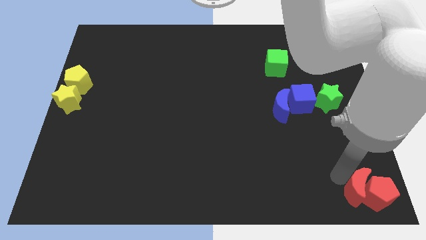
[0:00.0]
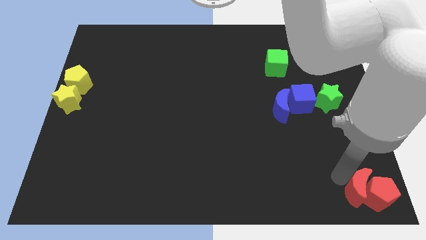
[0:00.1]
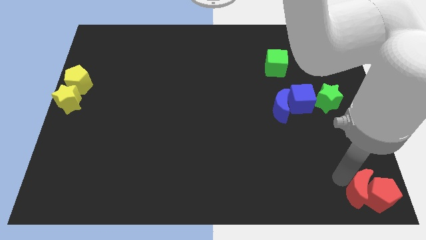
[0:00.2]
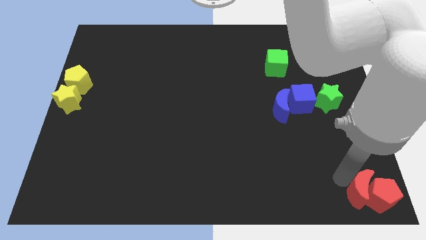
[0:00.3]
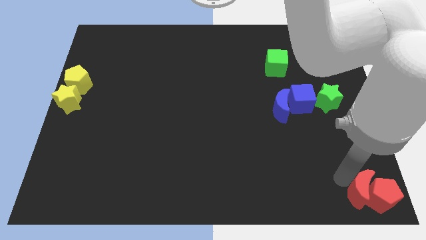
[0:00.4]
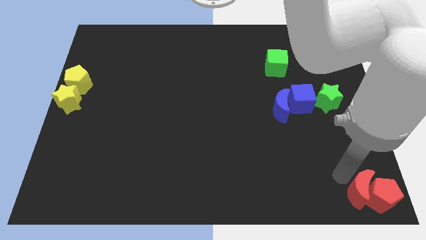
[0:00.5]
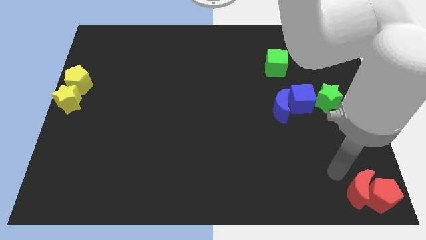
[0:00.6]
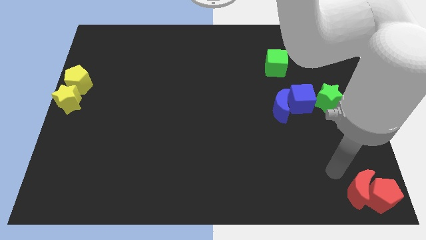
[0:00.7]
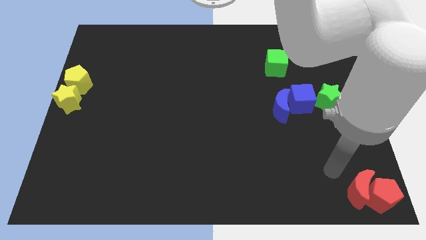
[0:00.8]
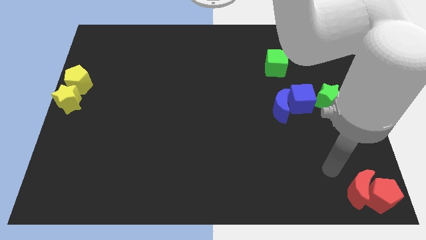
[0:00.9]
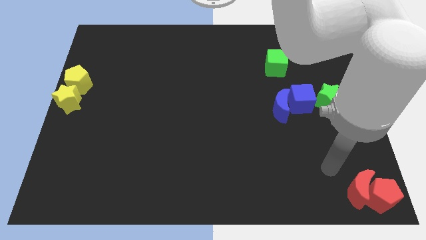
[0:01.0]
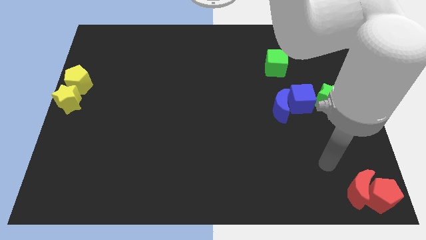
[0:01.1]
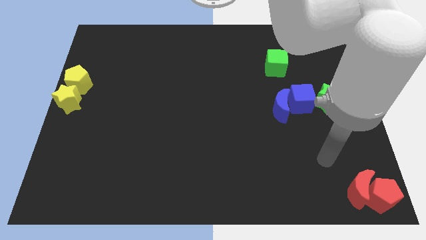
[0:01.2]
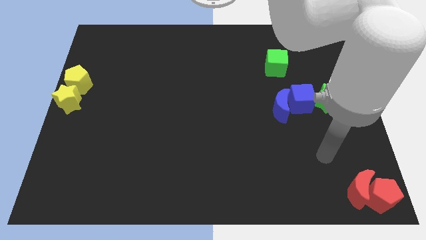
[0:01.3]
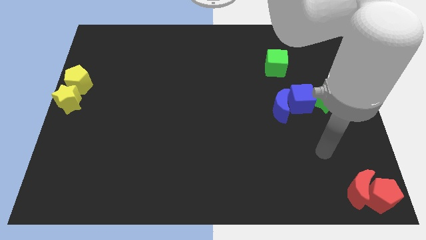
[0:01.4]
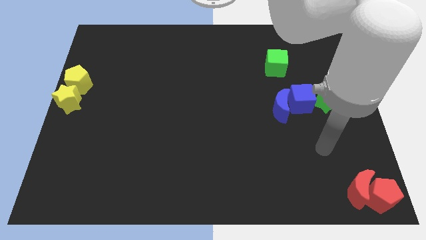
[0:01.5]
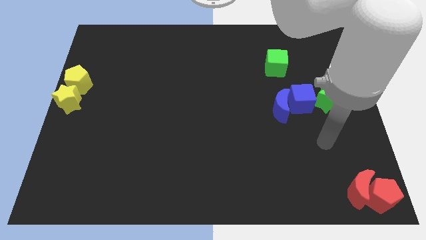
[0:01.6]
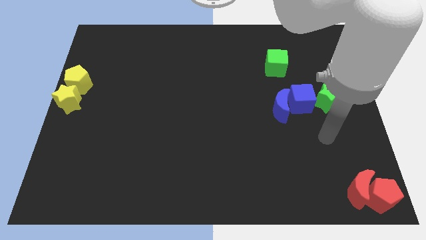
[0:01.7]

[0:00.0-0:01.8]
place the red pentagon to the bottom right

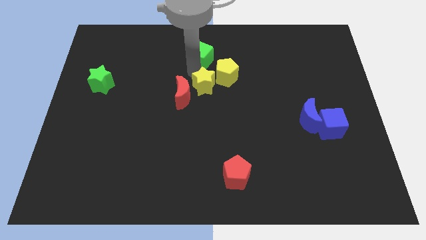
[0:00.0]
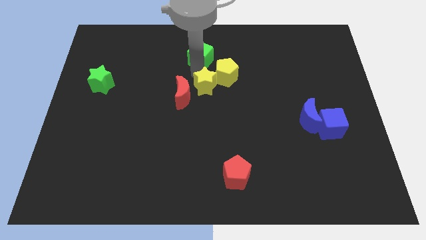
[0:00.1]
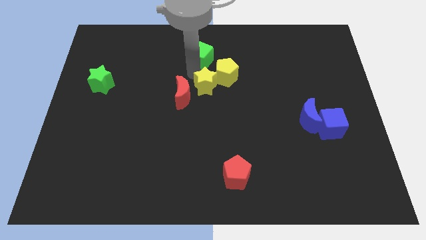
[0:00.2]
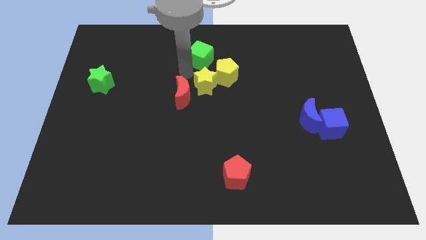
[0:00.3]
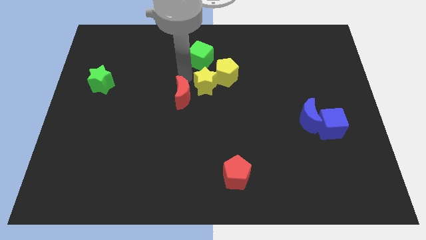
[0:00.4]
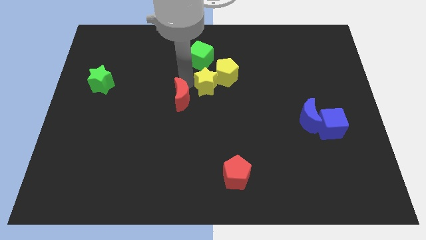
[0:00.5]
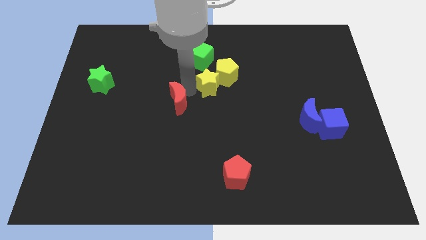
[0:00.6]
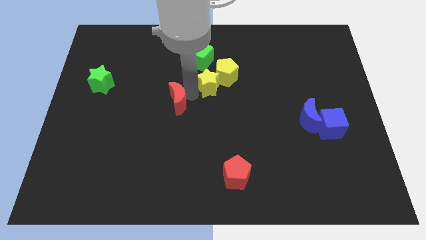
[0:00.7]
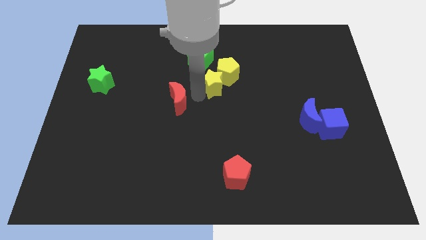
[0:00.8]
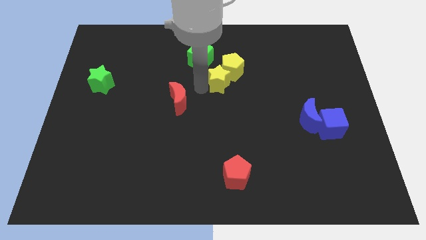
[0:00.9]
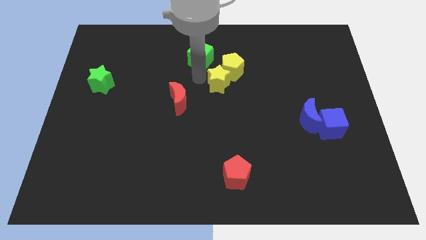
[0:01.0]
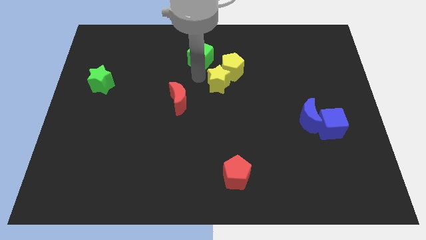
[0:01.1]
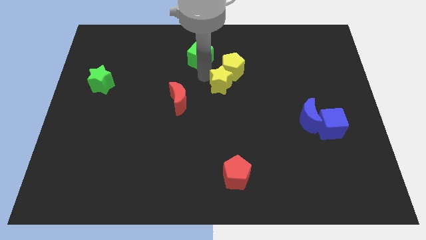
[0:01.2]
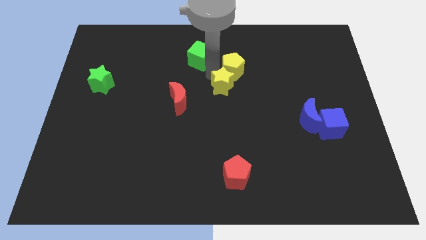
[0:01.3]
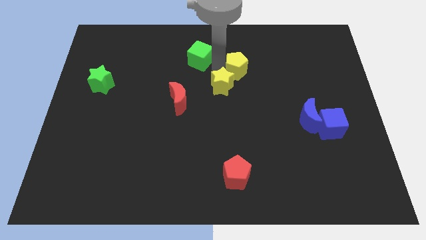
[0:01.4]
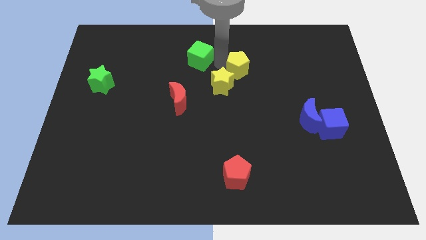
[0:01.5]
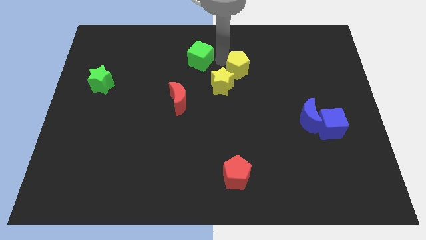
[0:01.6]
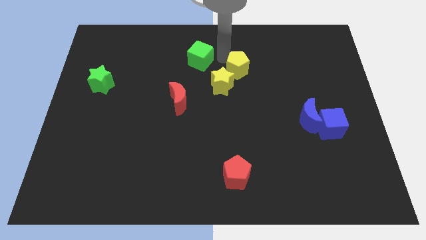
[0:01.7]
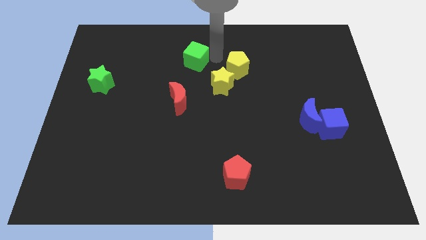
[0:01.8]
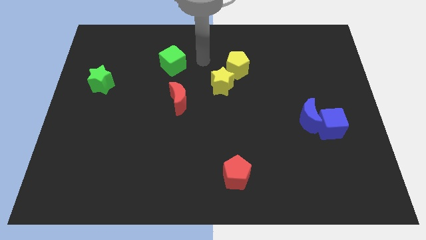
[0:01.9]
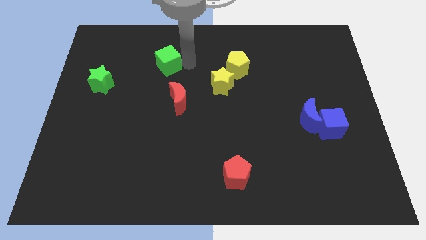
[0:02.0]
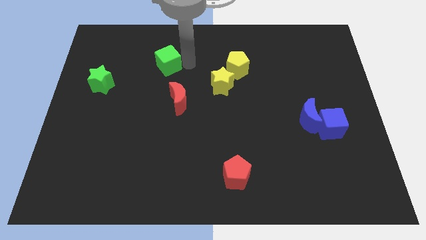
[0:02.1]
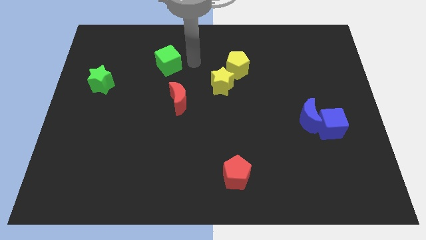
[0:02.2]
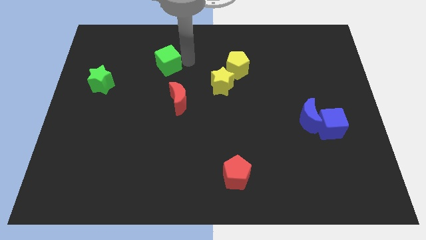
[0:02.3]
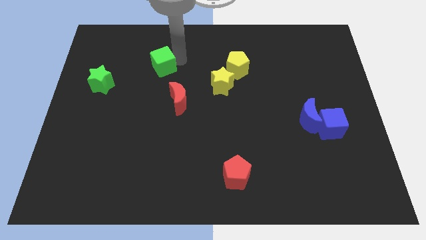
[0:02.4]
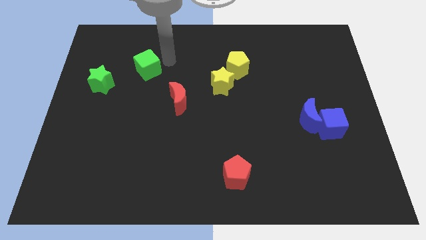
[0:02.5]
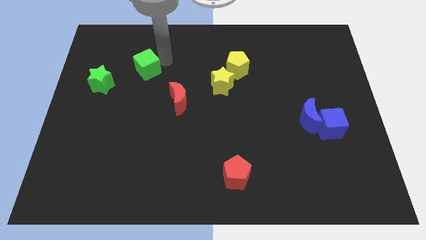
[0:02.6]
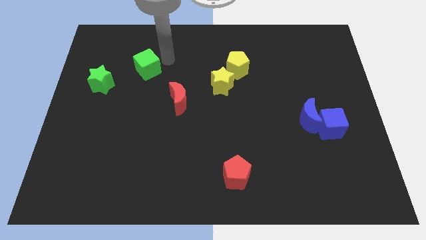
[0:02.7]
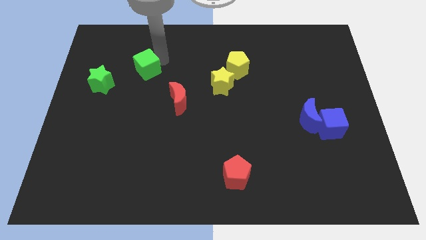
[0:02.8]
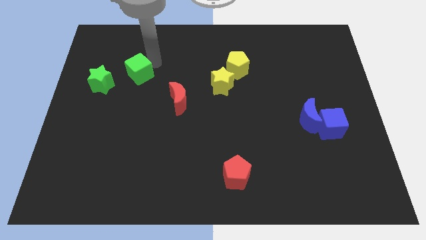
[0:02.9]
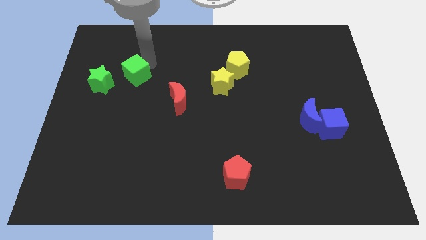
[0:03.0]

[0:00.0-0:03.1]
push the green cube towards the green star

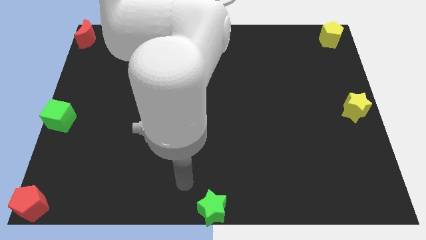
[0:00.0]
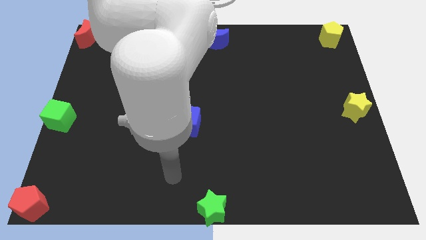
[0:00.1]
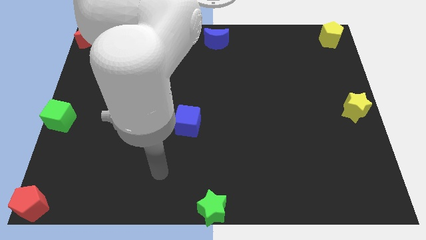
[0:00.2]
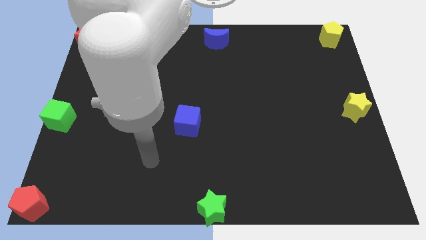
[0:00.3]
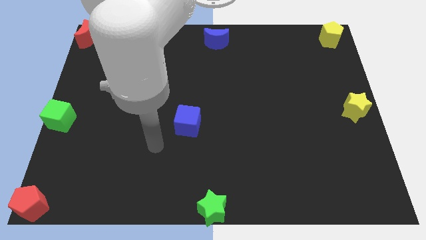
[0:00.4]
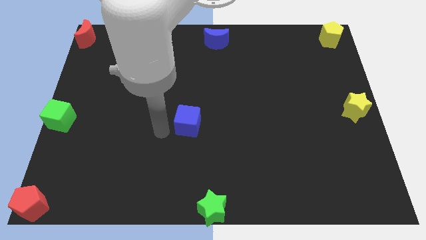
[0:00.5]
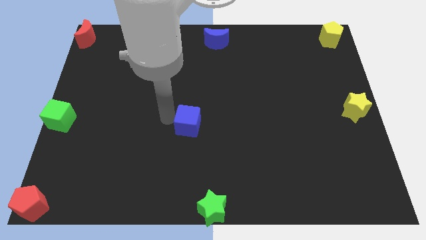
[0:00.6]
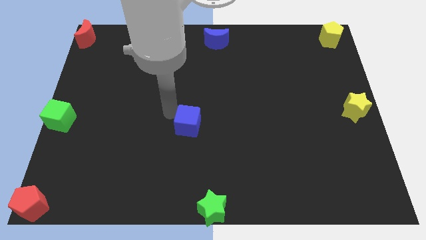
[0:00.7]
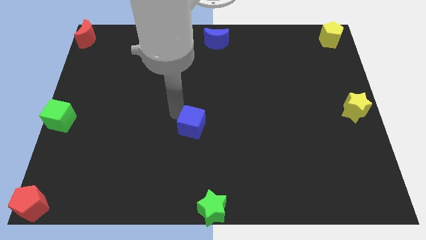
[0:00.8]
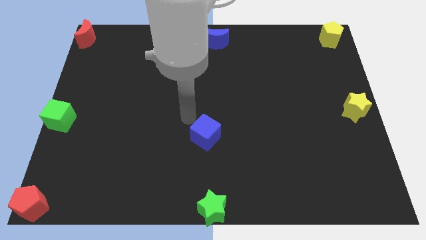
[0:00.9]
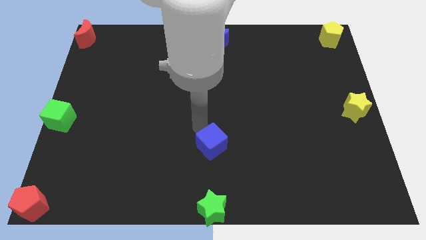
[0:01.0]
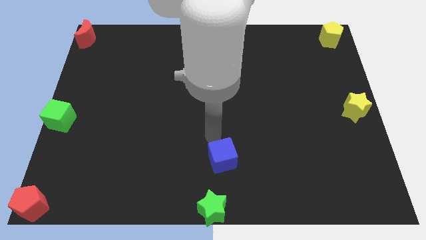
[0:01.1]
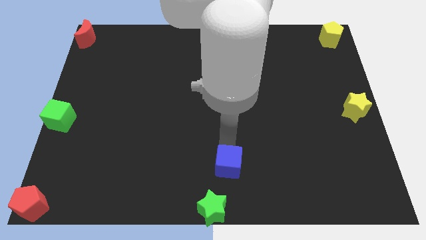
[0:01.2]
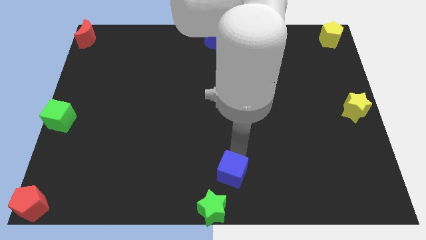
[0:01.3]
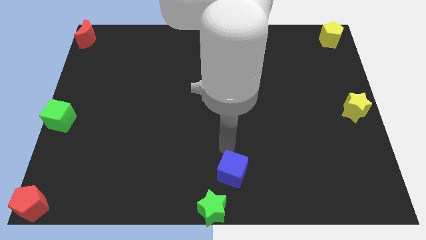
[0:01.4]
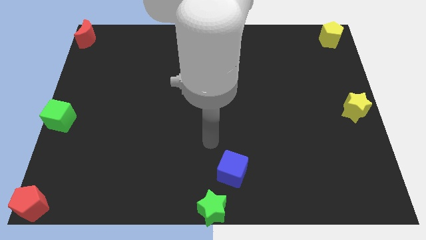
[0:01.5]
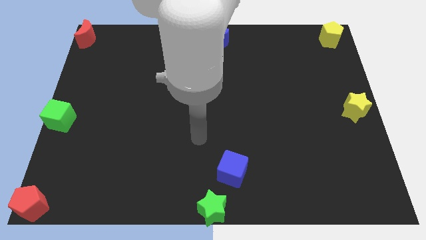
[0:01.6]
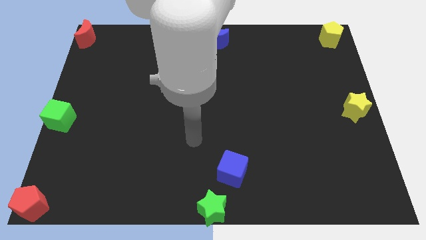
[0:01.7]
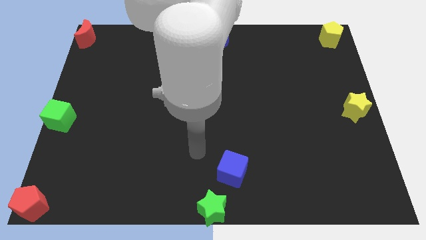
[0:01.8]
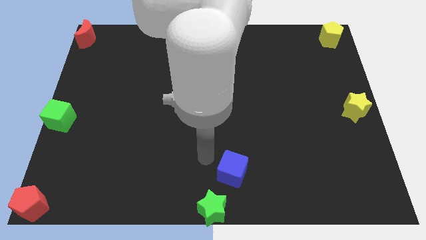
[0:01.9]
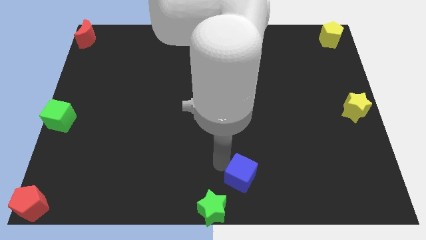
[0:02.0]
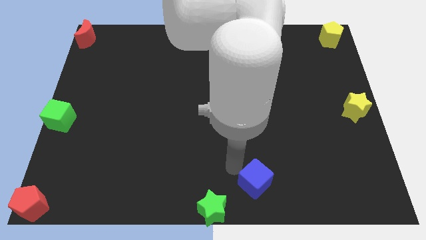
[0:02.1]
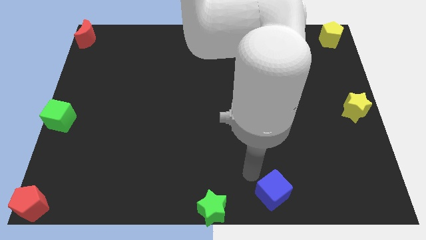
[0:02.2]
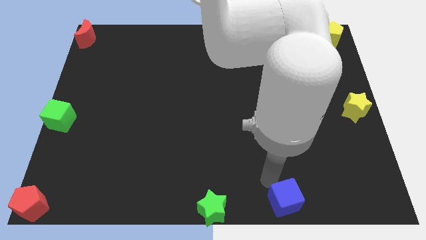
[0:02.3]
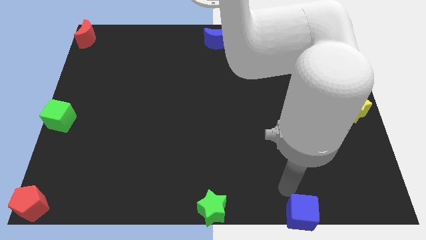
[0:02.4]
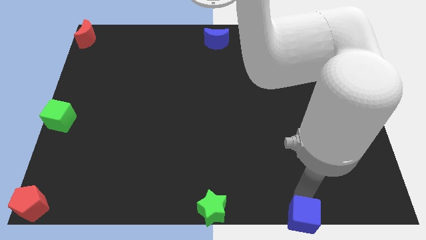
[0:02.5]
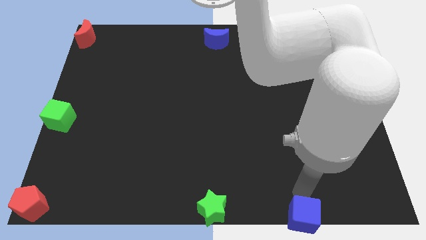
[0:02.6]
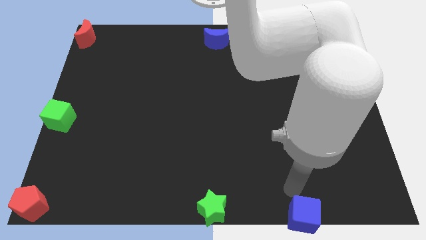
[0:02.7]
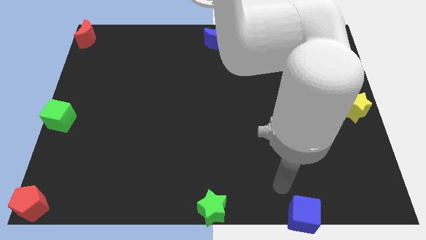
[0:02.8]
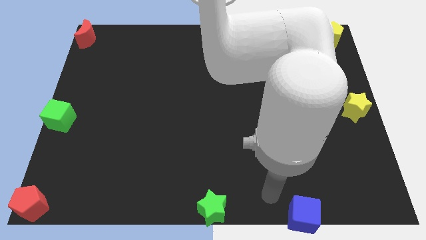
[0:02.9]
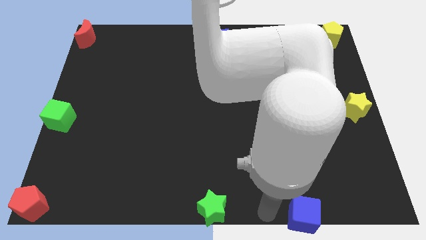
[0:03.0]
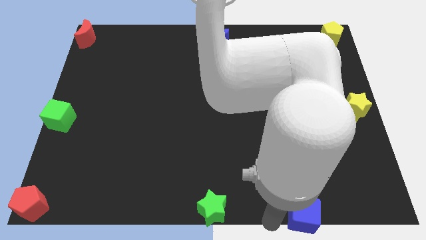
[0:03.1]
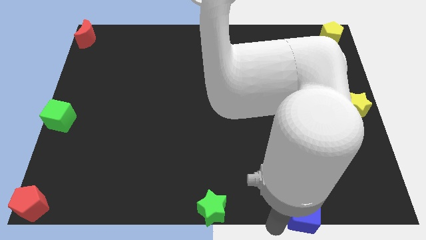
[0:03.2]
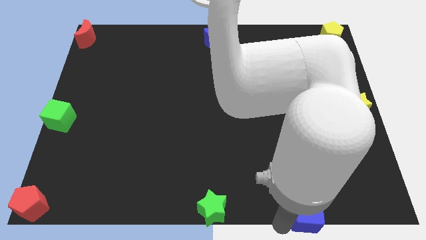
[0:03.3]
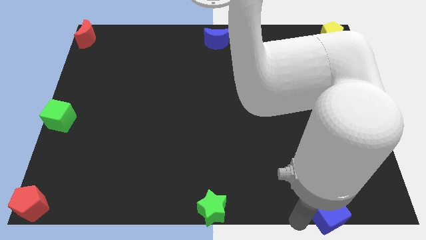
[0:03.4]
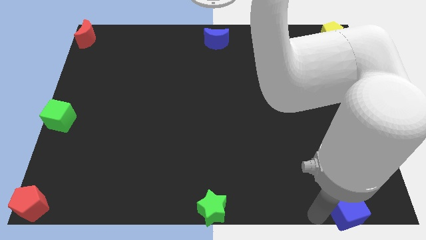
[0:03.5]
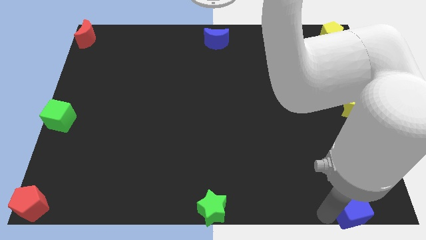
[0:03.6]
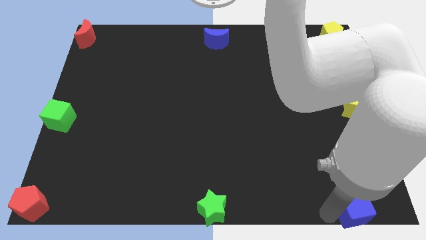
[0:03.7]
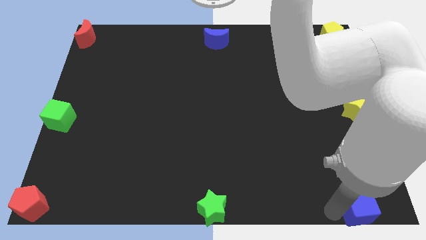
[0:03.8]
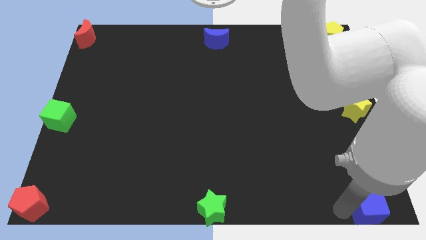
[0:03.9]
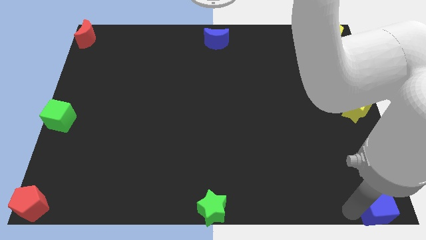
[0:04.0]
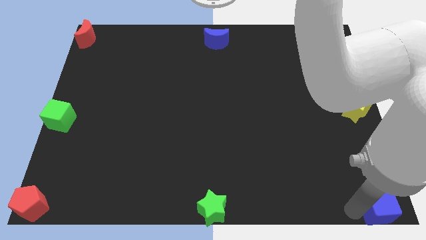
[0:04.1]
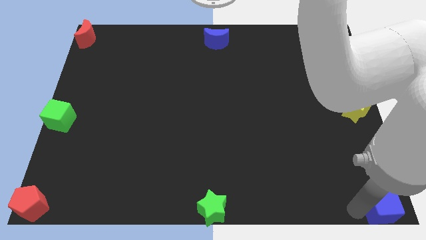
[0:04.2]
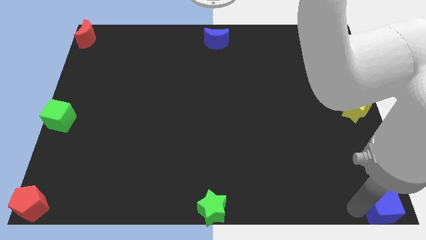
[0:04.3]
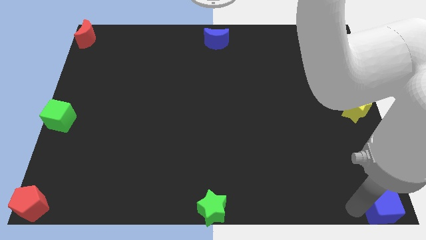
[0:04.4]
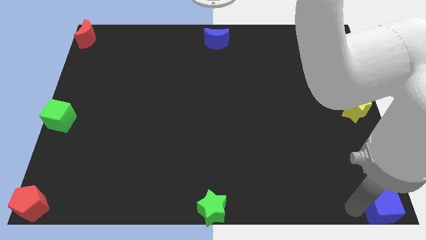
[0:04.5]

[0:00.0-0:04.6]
place the blue cube to the bottom right of the board
